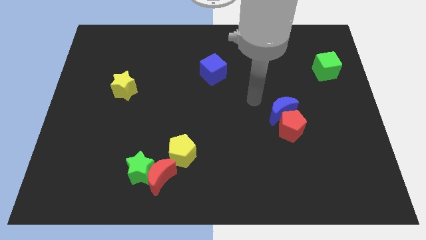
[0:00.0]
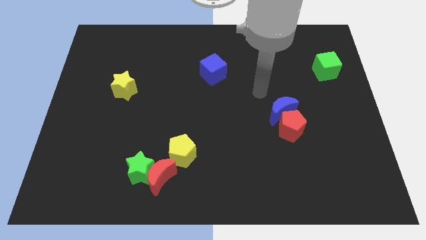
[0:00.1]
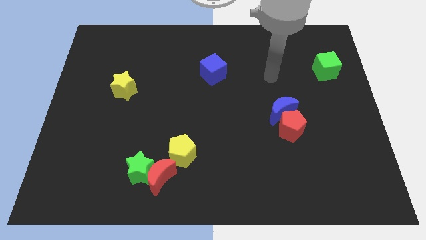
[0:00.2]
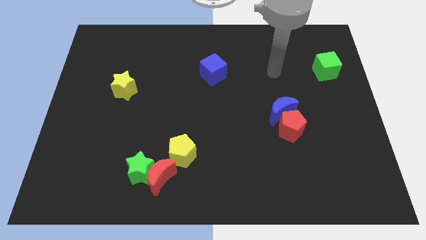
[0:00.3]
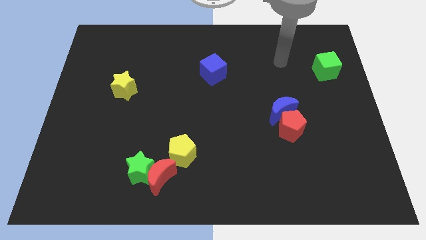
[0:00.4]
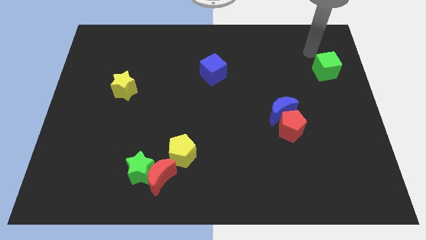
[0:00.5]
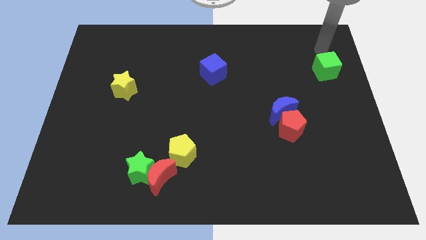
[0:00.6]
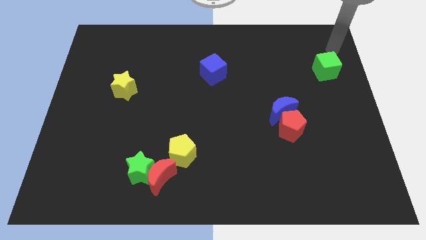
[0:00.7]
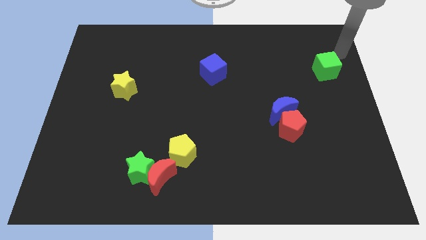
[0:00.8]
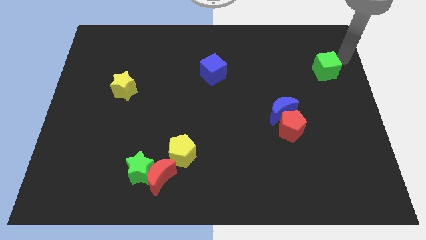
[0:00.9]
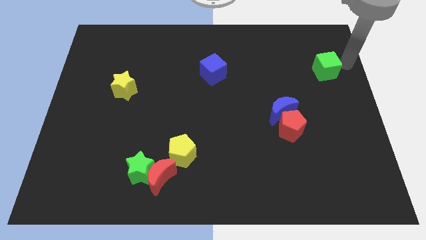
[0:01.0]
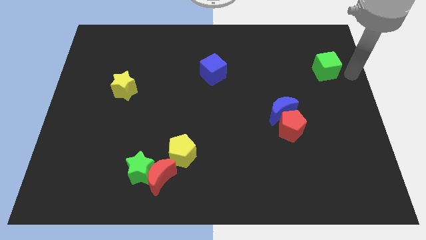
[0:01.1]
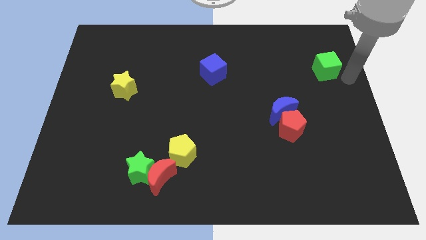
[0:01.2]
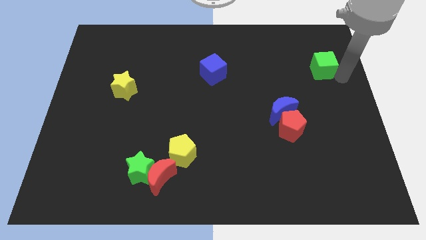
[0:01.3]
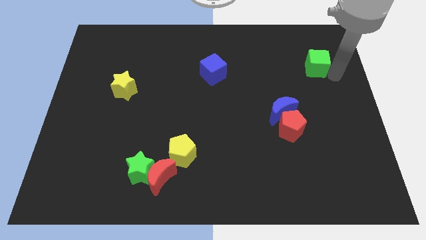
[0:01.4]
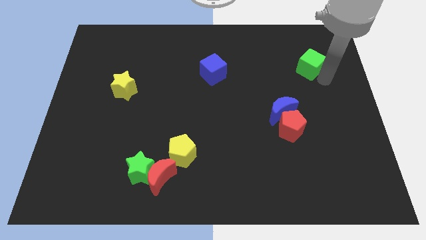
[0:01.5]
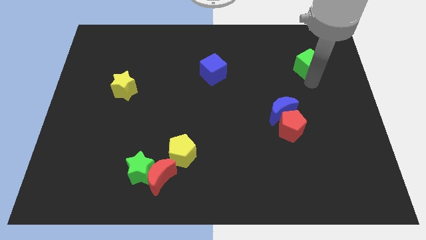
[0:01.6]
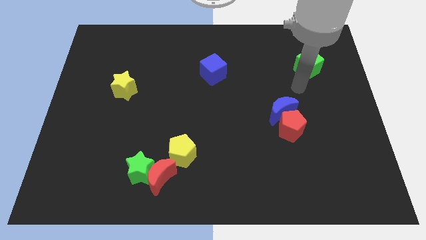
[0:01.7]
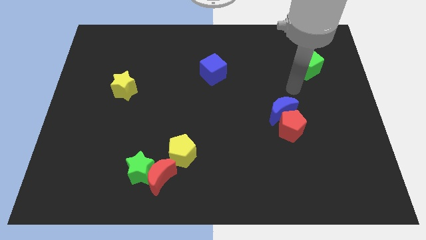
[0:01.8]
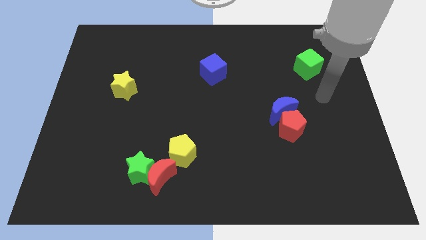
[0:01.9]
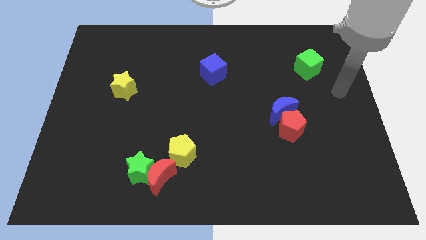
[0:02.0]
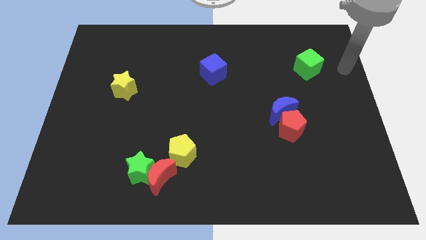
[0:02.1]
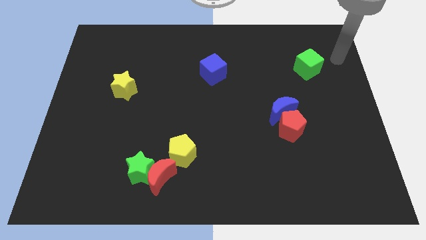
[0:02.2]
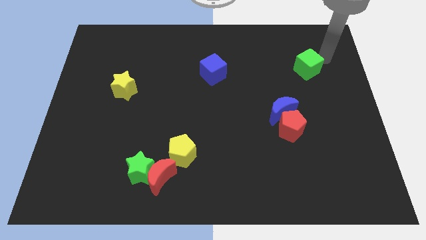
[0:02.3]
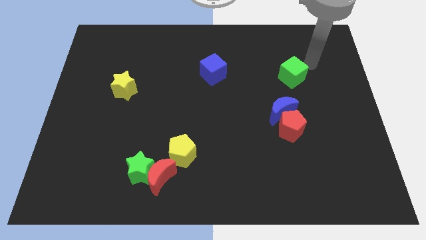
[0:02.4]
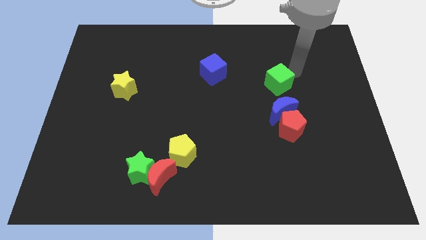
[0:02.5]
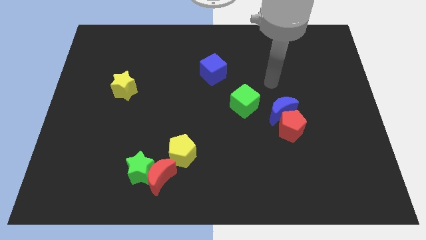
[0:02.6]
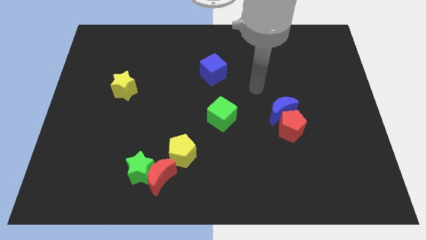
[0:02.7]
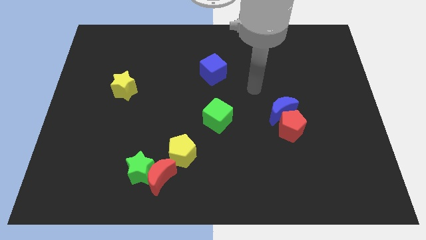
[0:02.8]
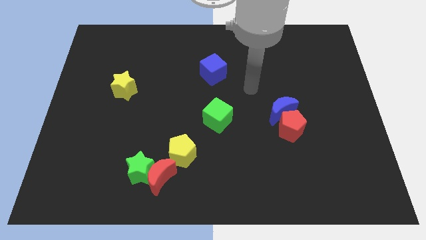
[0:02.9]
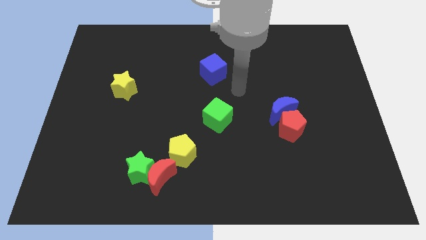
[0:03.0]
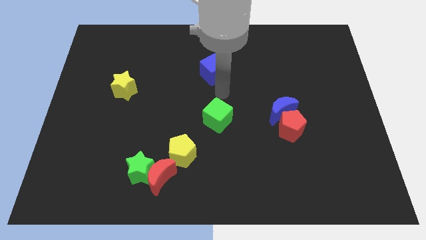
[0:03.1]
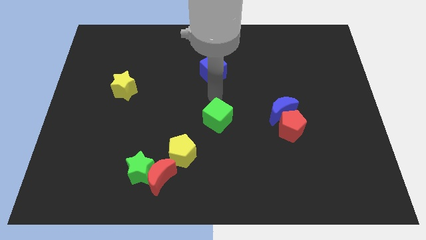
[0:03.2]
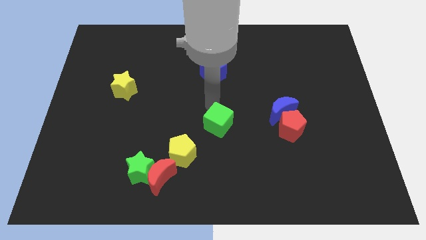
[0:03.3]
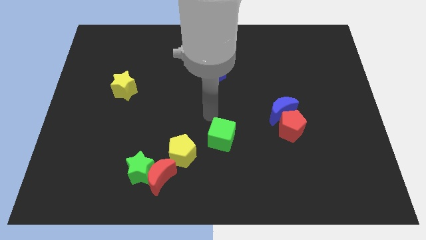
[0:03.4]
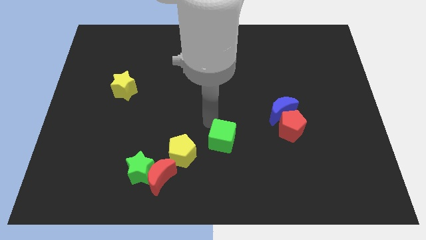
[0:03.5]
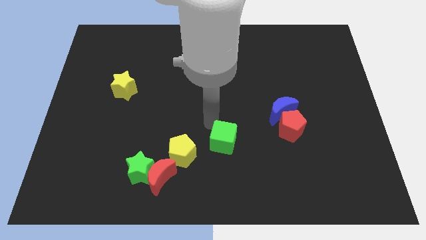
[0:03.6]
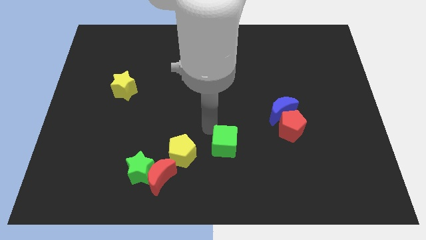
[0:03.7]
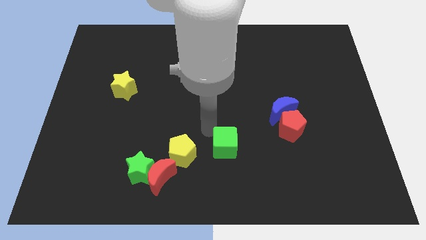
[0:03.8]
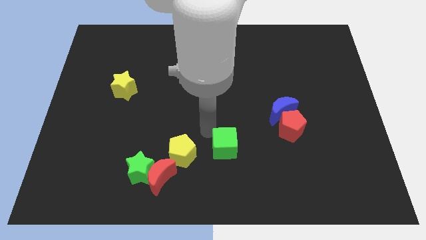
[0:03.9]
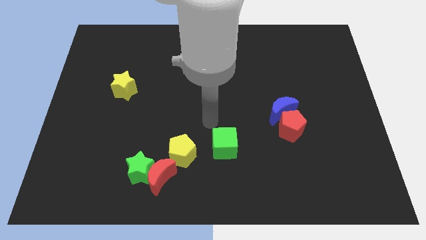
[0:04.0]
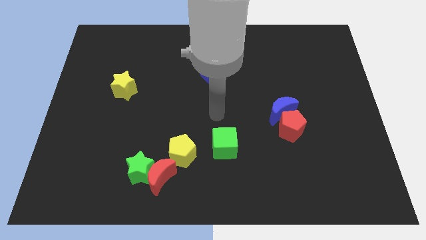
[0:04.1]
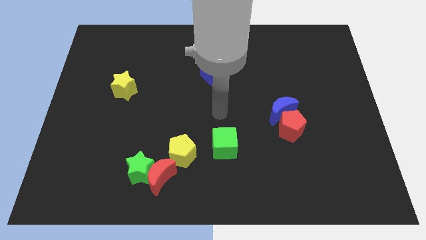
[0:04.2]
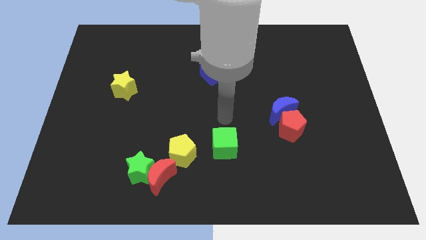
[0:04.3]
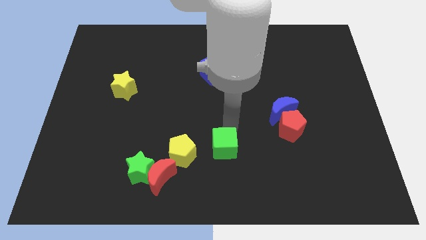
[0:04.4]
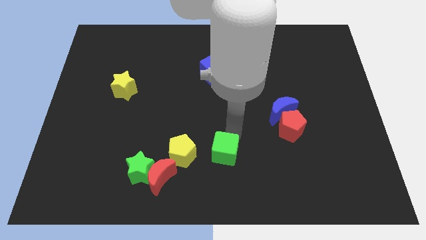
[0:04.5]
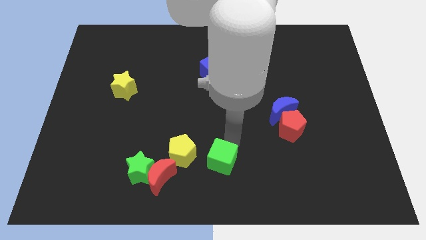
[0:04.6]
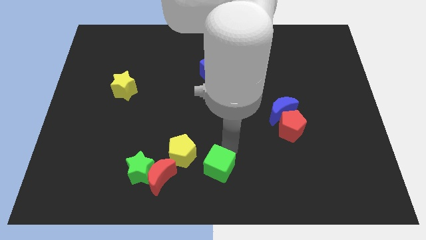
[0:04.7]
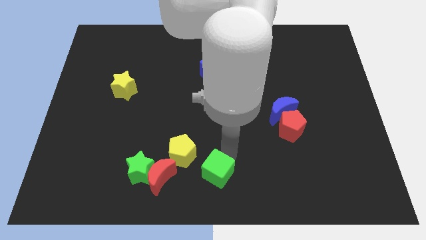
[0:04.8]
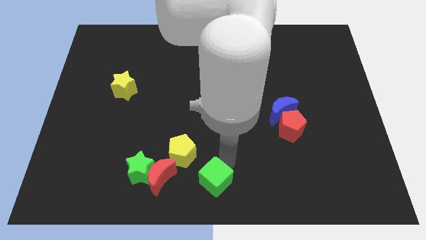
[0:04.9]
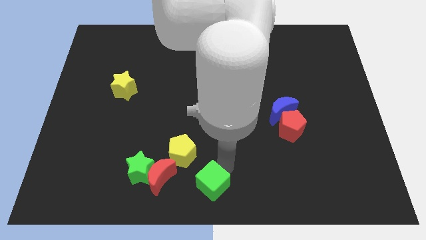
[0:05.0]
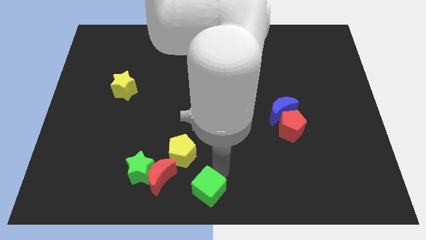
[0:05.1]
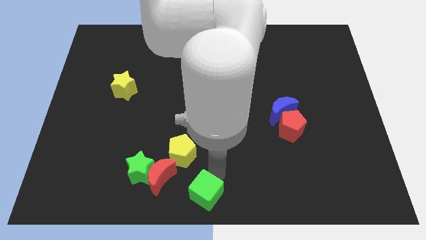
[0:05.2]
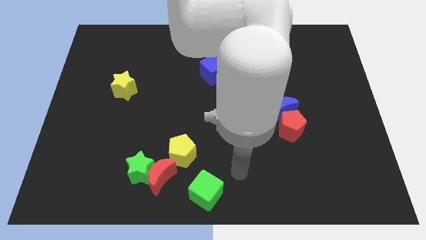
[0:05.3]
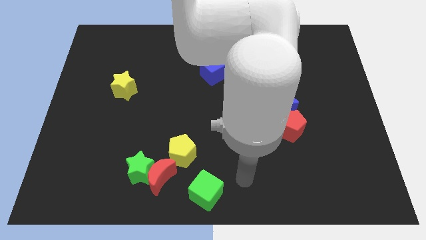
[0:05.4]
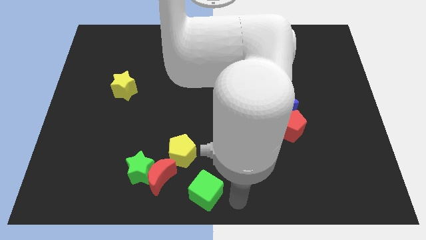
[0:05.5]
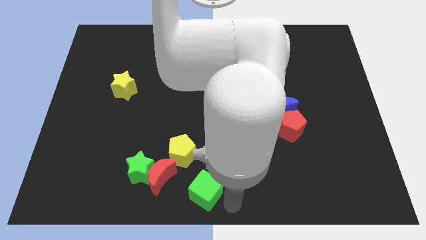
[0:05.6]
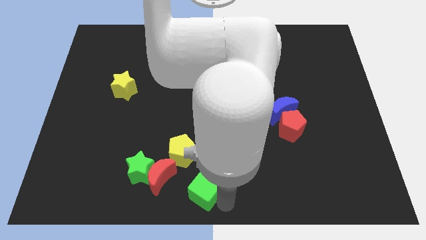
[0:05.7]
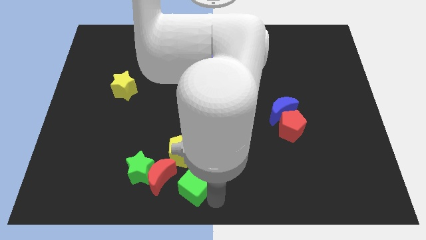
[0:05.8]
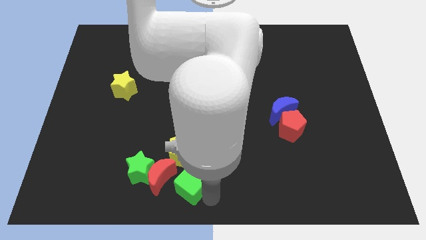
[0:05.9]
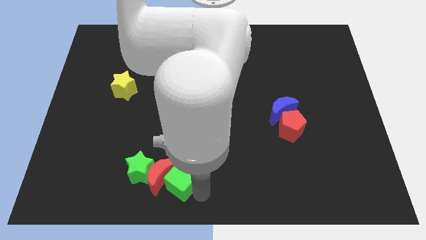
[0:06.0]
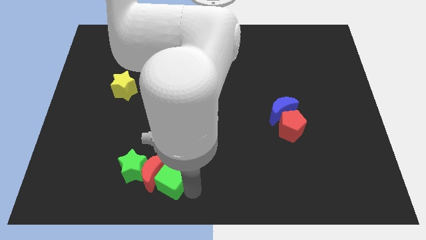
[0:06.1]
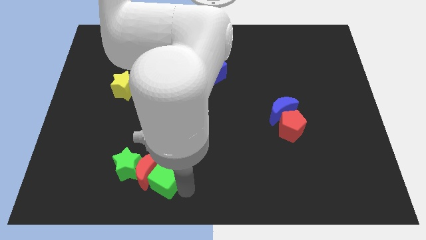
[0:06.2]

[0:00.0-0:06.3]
slide the green cube close to the red moon

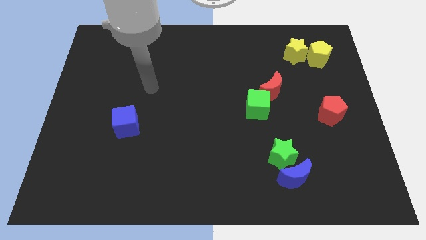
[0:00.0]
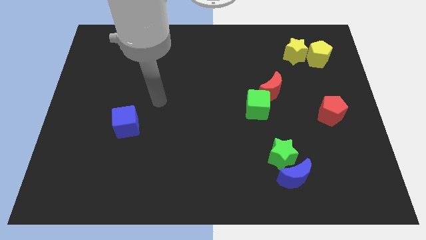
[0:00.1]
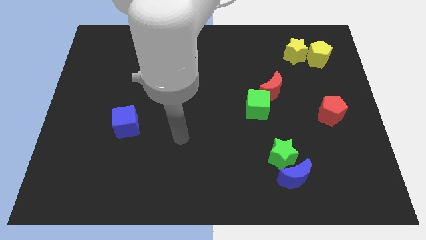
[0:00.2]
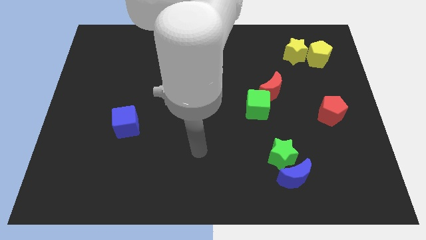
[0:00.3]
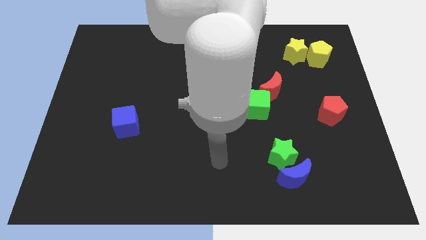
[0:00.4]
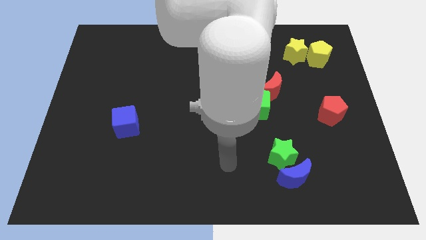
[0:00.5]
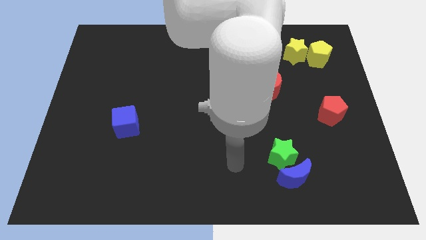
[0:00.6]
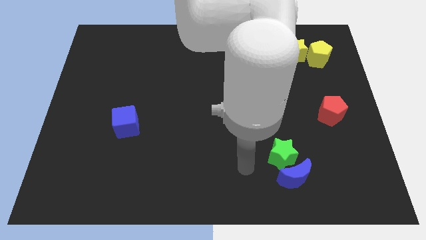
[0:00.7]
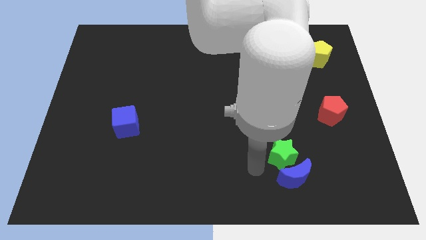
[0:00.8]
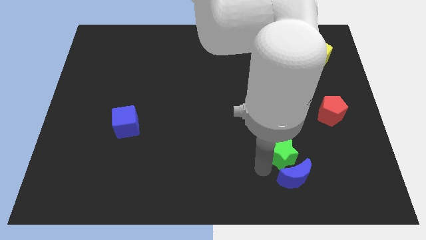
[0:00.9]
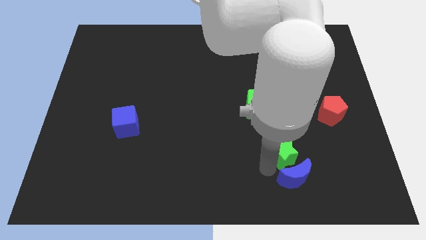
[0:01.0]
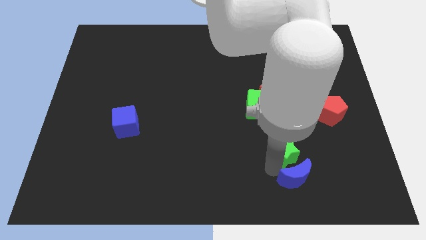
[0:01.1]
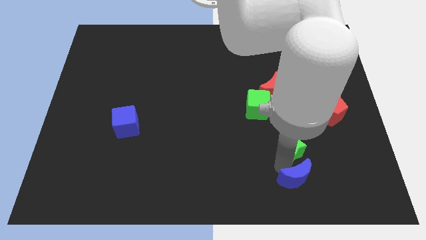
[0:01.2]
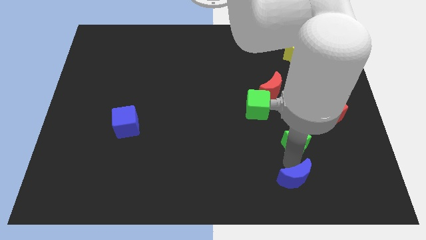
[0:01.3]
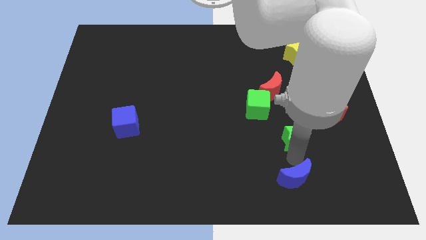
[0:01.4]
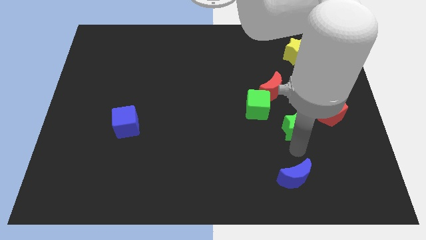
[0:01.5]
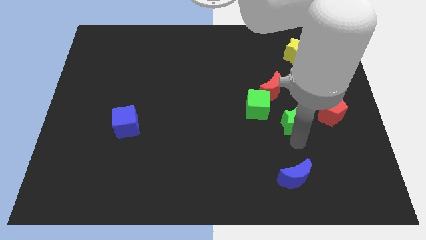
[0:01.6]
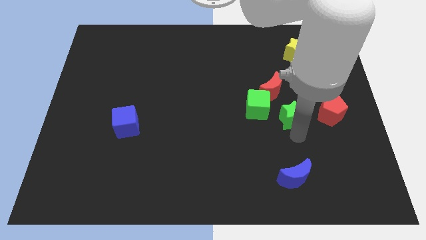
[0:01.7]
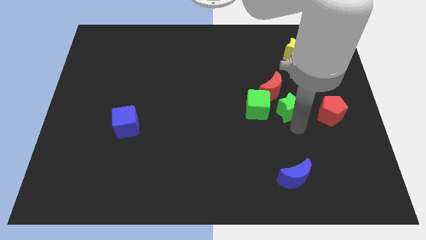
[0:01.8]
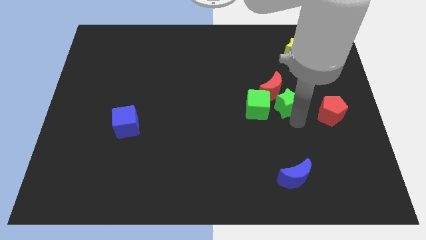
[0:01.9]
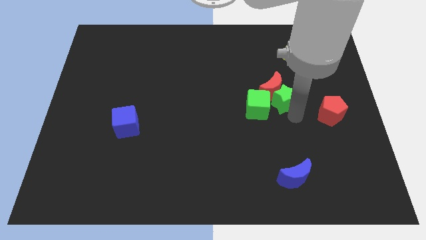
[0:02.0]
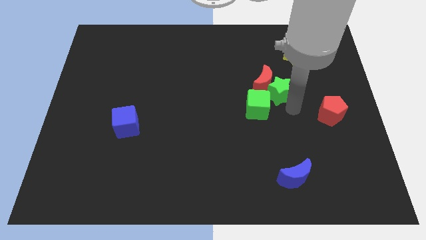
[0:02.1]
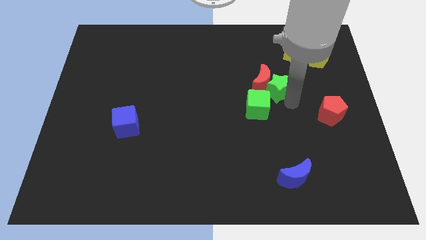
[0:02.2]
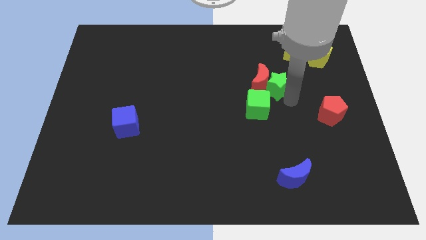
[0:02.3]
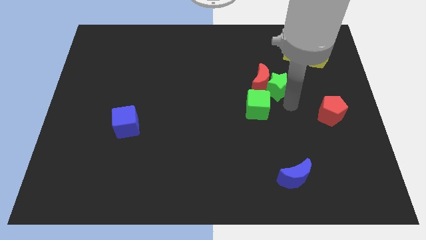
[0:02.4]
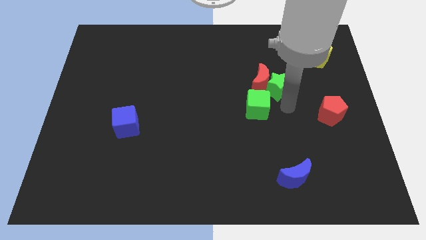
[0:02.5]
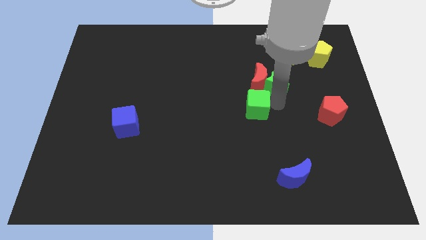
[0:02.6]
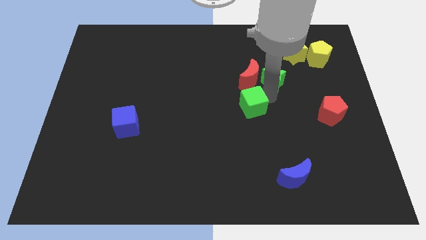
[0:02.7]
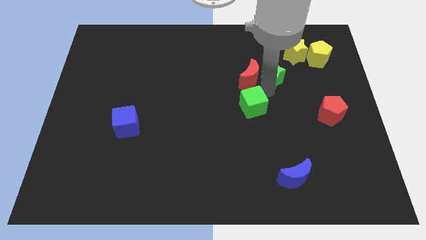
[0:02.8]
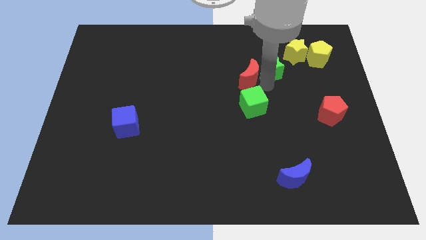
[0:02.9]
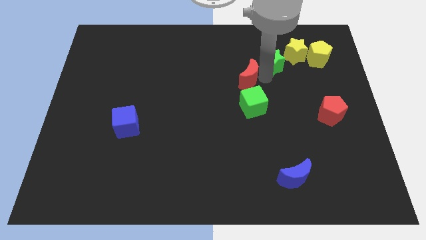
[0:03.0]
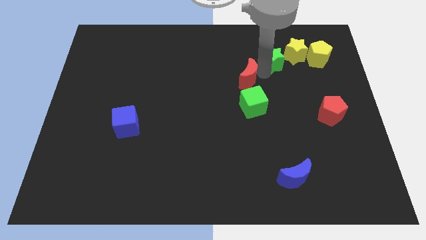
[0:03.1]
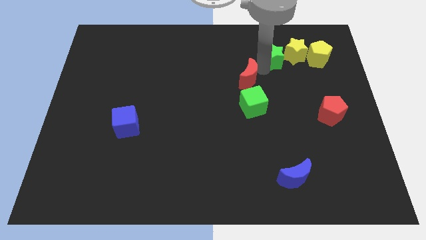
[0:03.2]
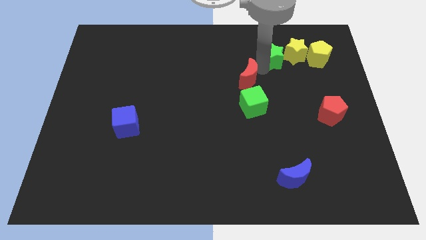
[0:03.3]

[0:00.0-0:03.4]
put the green star close to the yellow star
